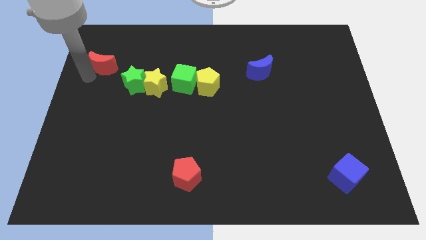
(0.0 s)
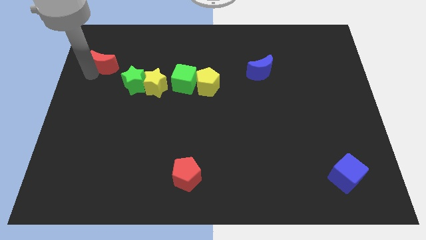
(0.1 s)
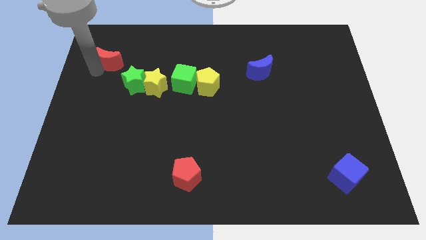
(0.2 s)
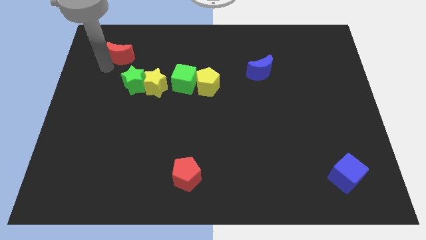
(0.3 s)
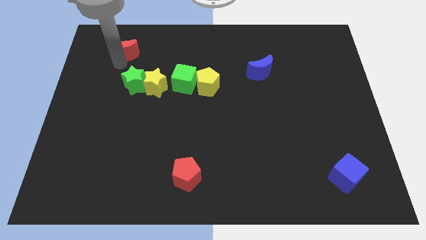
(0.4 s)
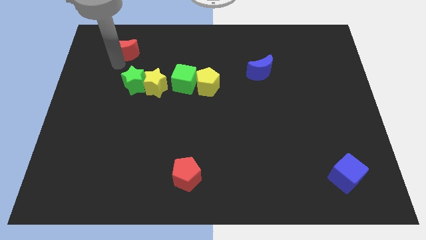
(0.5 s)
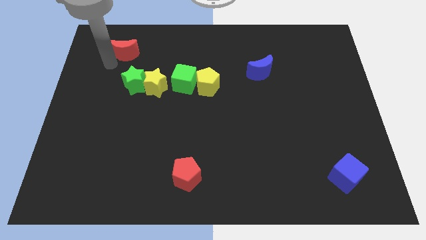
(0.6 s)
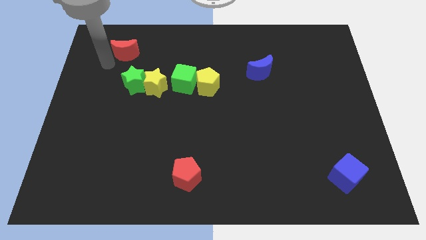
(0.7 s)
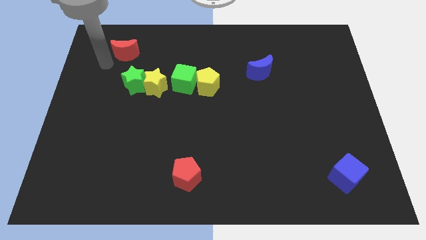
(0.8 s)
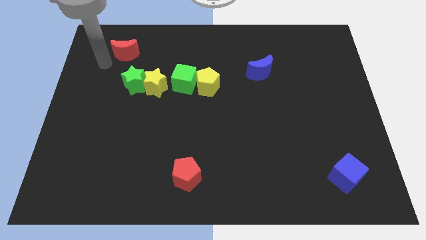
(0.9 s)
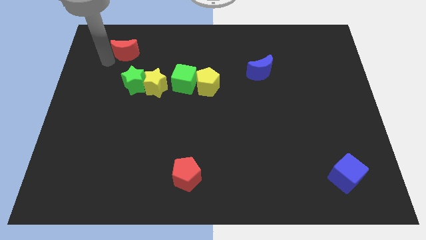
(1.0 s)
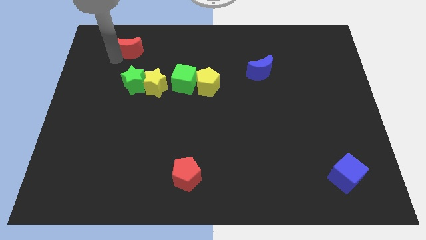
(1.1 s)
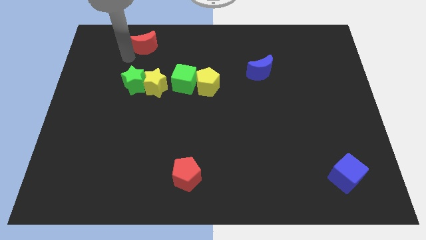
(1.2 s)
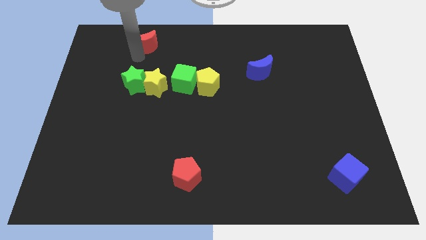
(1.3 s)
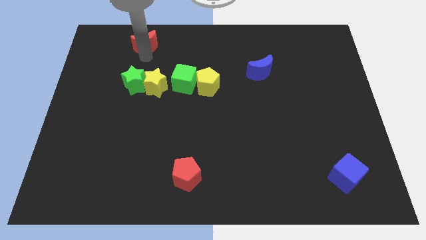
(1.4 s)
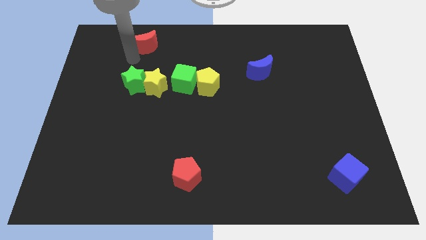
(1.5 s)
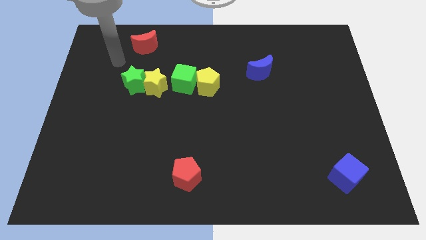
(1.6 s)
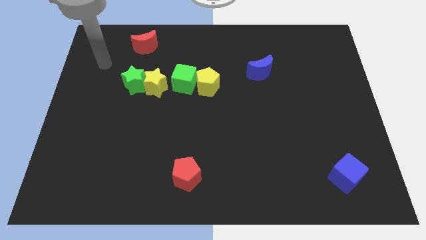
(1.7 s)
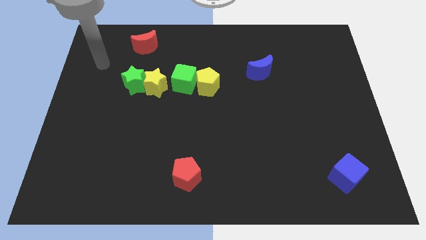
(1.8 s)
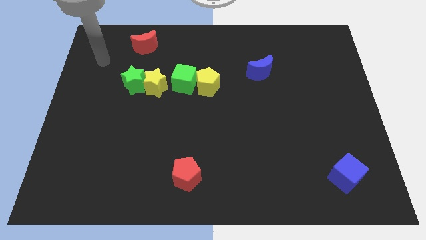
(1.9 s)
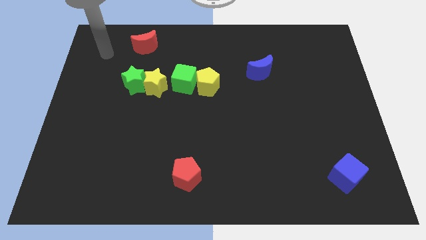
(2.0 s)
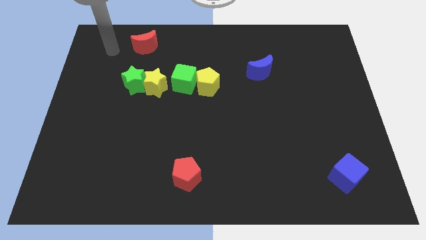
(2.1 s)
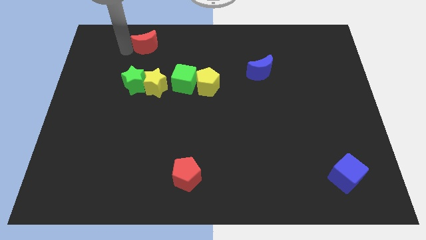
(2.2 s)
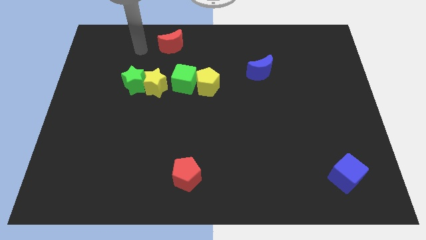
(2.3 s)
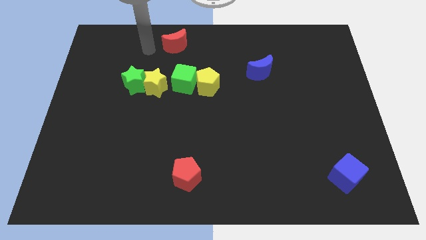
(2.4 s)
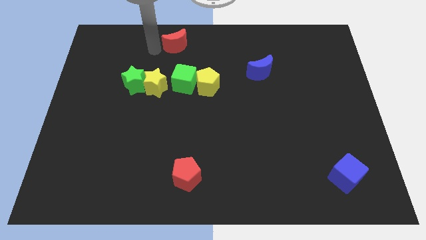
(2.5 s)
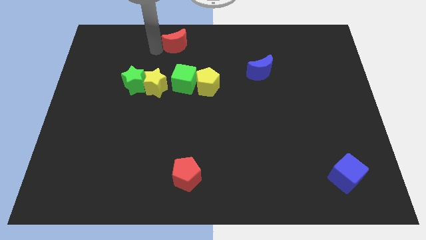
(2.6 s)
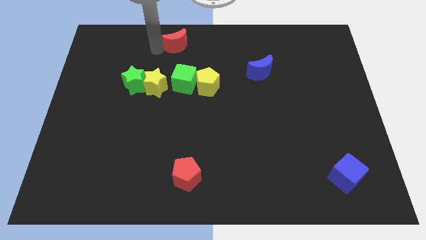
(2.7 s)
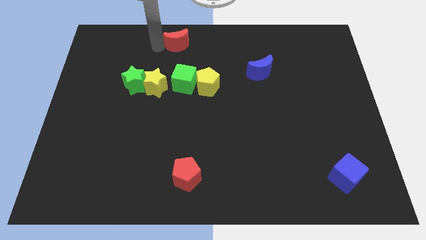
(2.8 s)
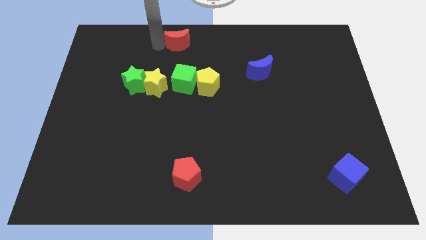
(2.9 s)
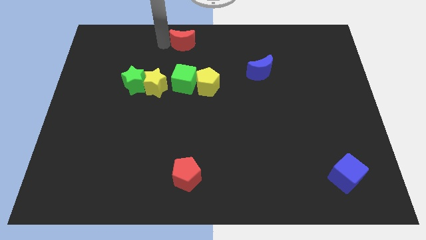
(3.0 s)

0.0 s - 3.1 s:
push red moon vertically above green cube

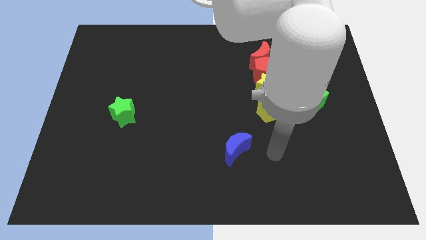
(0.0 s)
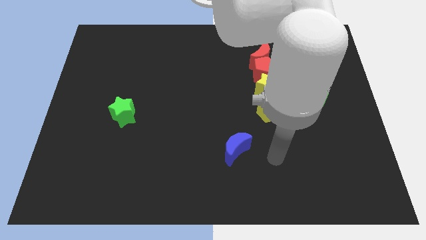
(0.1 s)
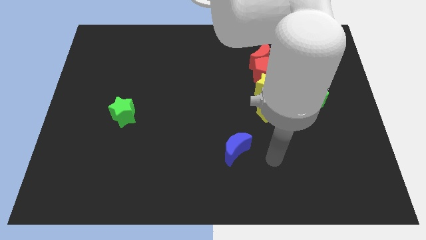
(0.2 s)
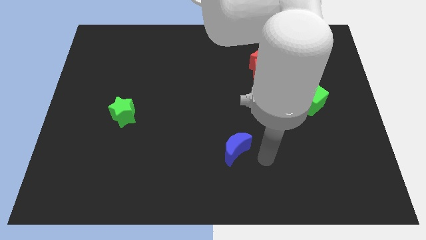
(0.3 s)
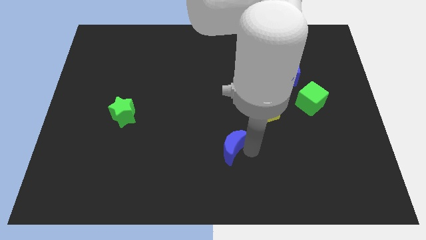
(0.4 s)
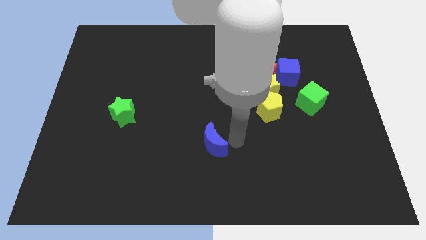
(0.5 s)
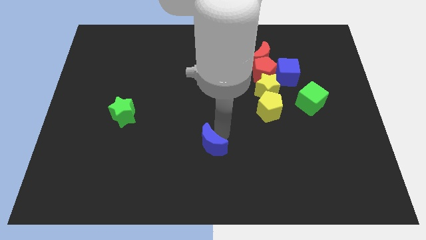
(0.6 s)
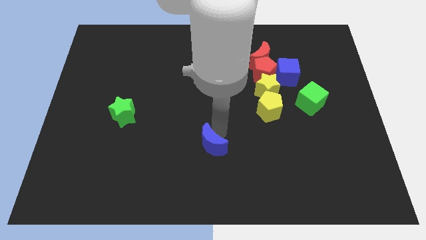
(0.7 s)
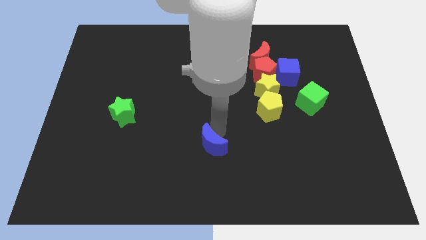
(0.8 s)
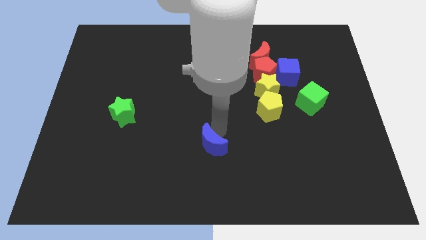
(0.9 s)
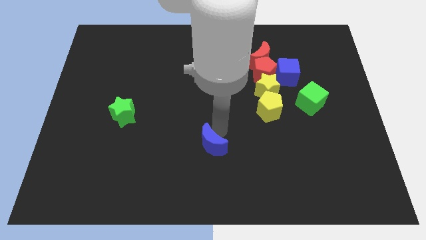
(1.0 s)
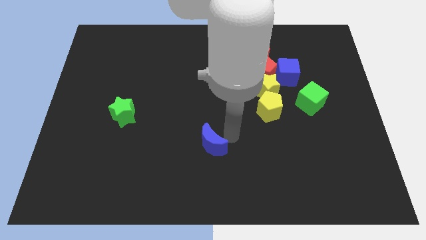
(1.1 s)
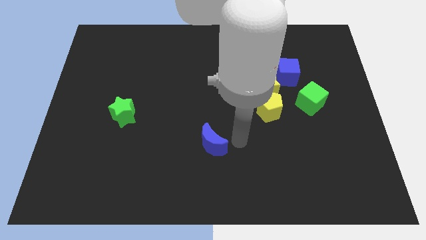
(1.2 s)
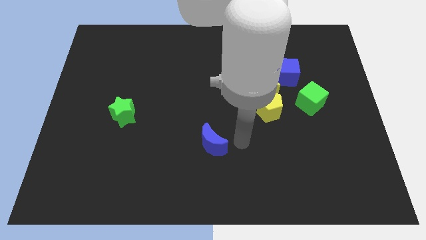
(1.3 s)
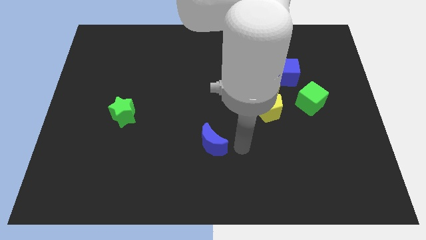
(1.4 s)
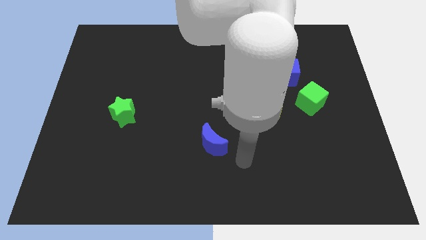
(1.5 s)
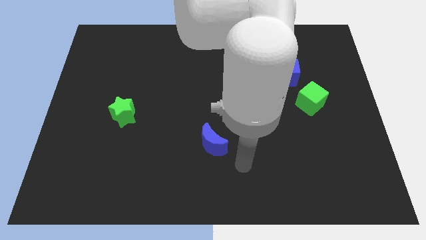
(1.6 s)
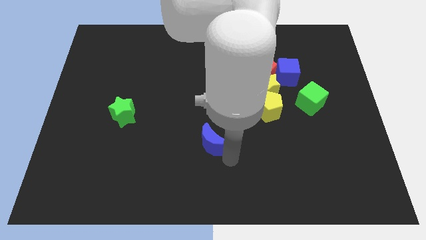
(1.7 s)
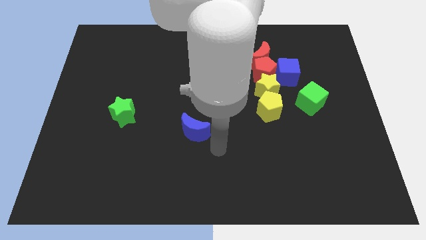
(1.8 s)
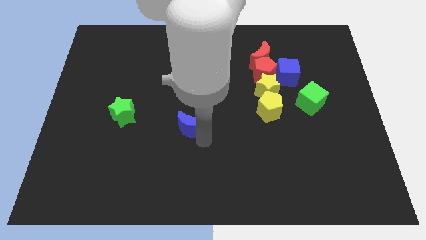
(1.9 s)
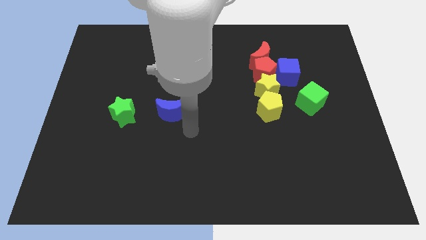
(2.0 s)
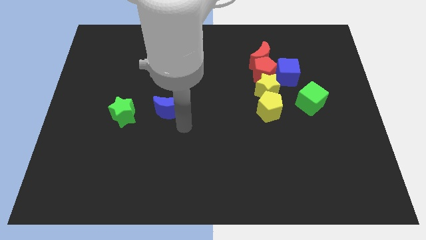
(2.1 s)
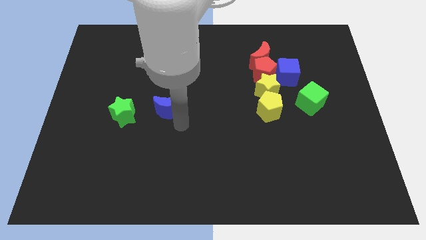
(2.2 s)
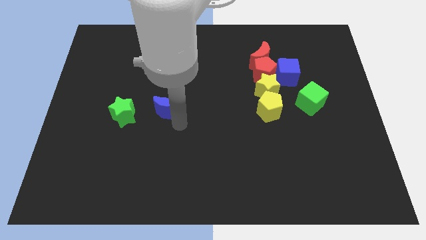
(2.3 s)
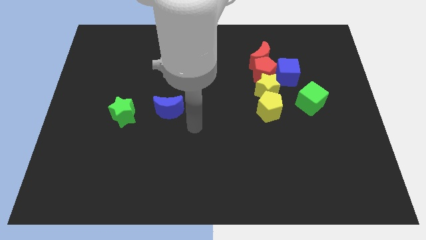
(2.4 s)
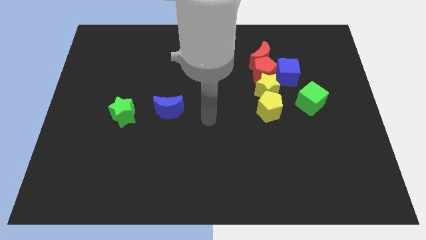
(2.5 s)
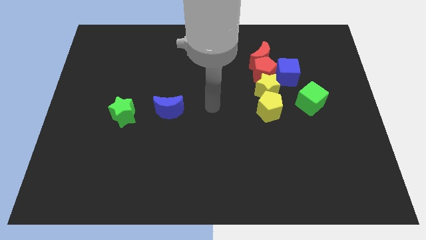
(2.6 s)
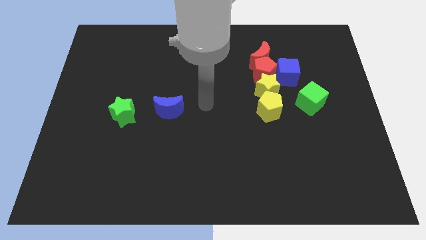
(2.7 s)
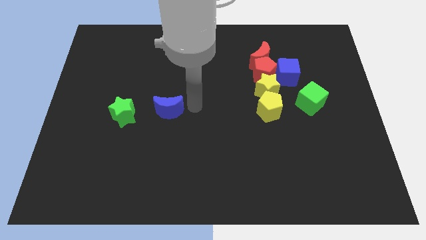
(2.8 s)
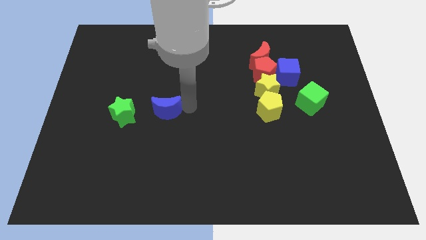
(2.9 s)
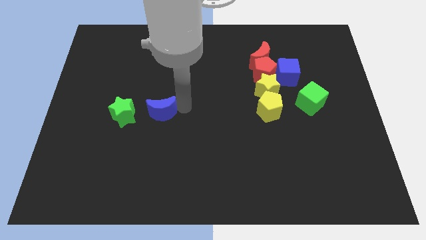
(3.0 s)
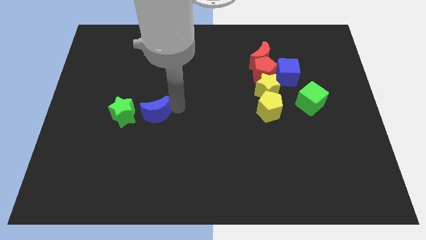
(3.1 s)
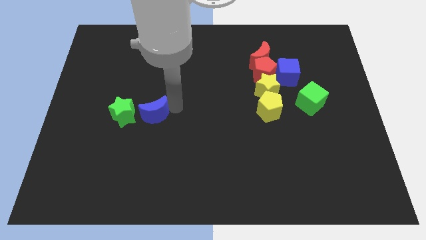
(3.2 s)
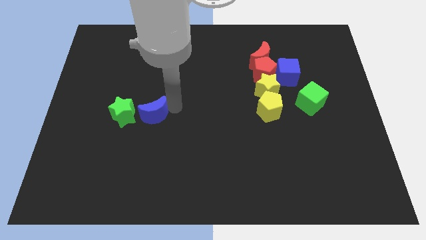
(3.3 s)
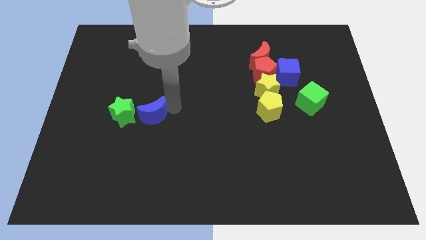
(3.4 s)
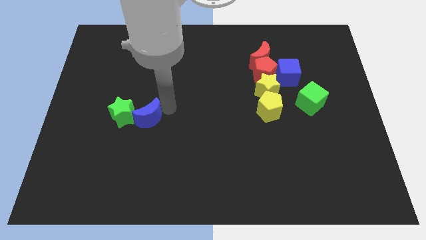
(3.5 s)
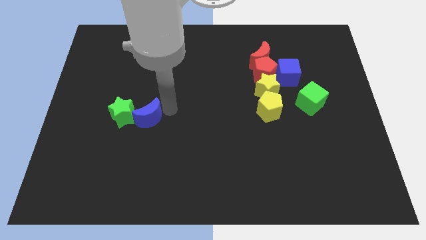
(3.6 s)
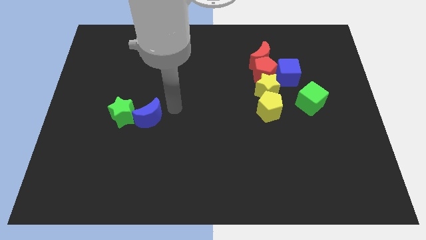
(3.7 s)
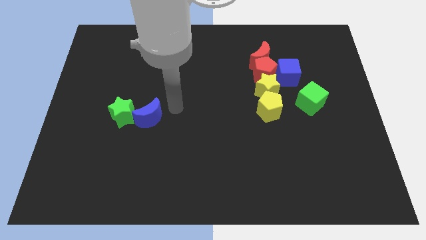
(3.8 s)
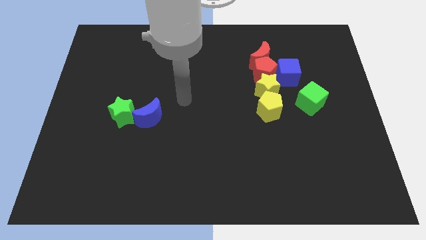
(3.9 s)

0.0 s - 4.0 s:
move the blue moon to the right of green star

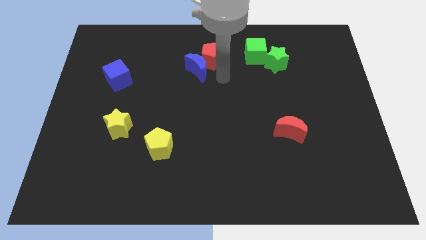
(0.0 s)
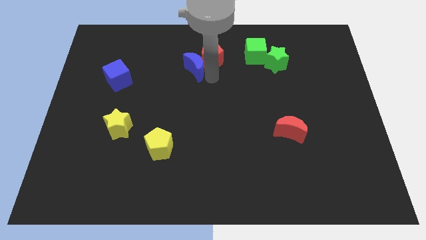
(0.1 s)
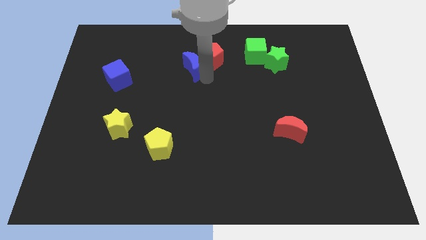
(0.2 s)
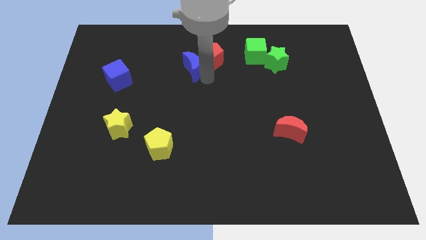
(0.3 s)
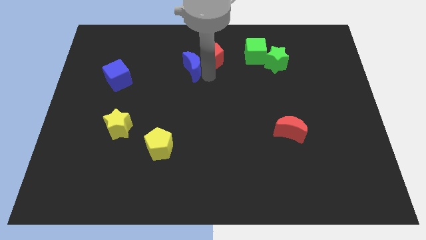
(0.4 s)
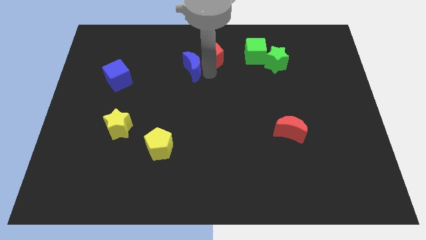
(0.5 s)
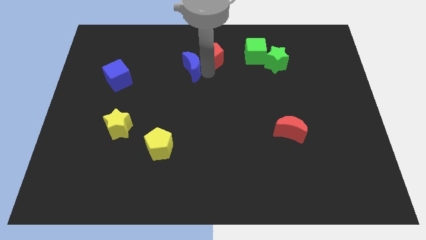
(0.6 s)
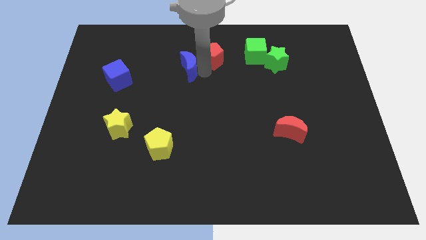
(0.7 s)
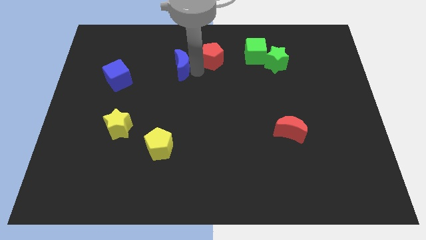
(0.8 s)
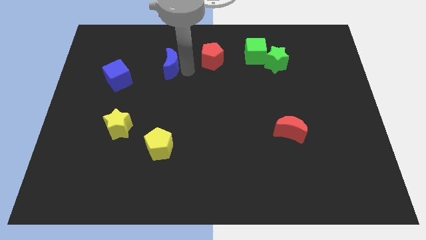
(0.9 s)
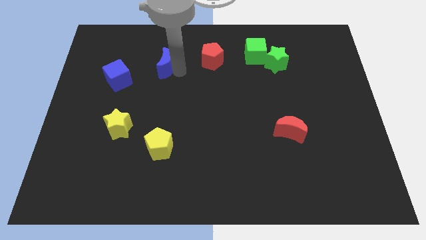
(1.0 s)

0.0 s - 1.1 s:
put blue moon in between blue cube and red pentagon

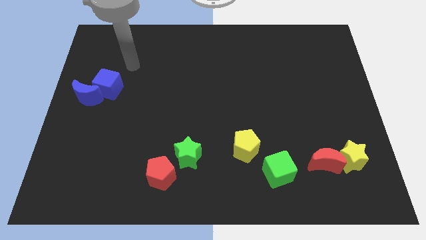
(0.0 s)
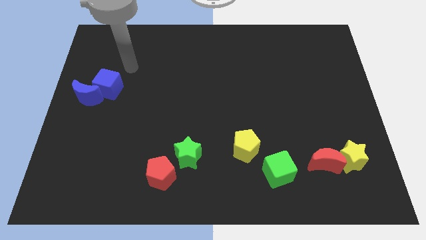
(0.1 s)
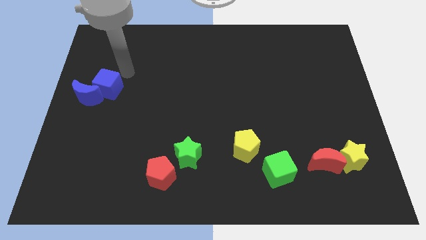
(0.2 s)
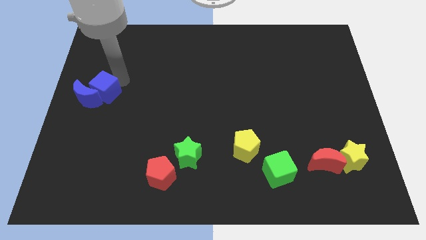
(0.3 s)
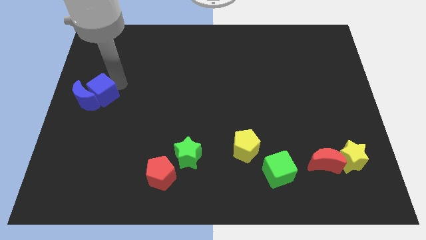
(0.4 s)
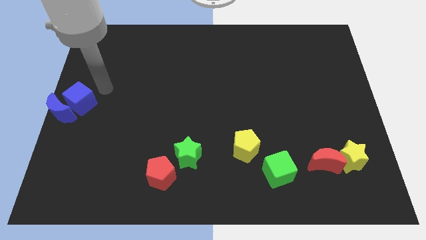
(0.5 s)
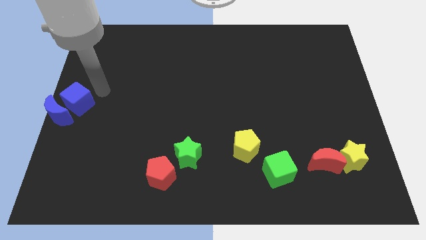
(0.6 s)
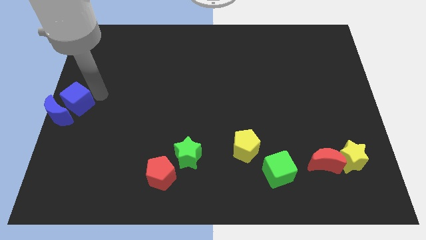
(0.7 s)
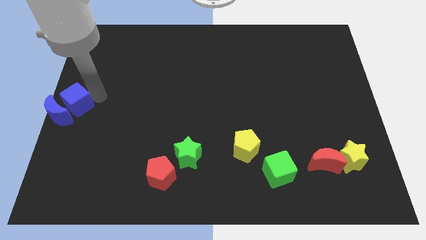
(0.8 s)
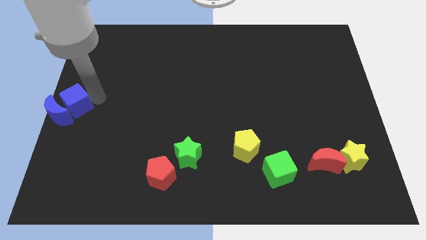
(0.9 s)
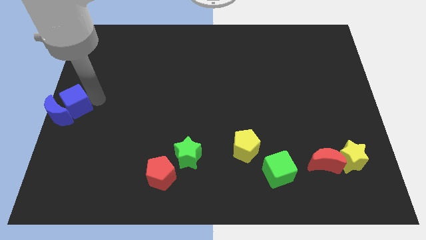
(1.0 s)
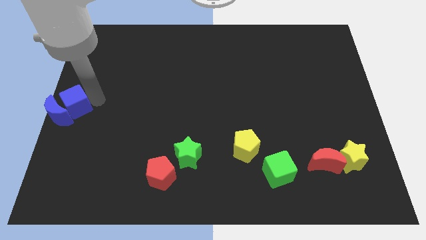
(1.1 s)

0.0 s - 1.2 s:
move the blue moon to the left center of the board
